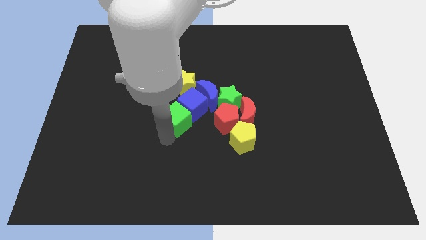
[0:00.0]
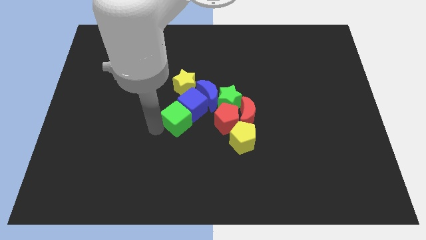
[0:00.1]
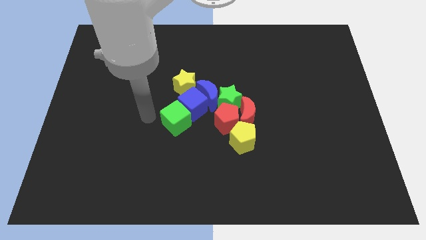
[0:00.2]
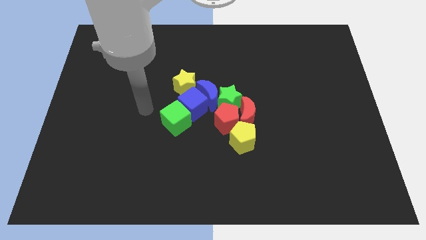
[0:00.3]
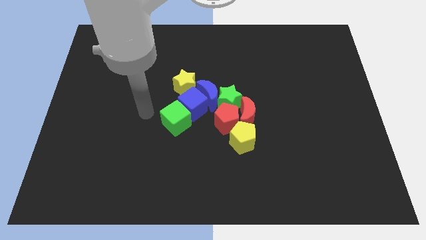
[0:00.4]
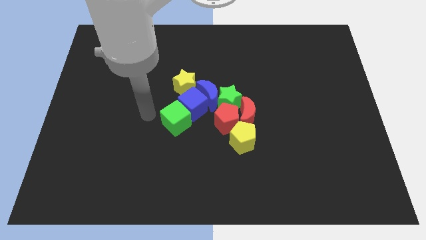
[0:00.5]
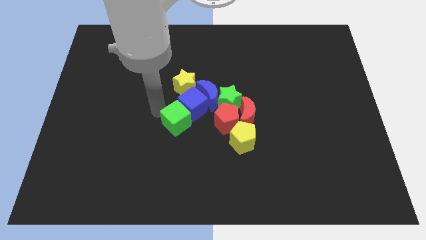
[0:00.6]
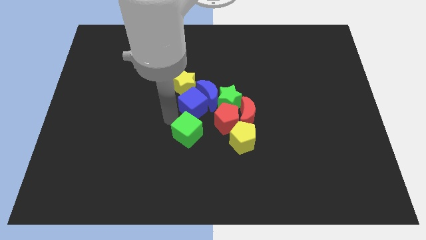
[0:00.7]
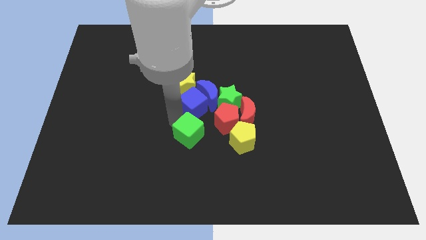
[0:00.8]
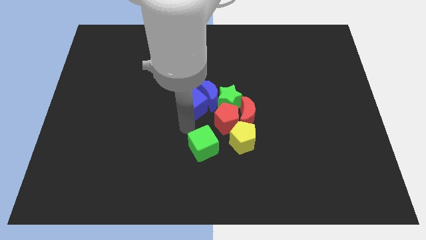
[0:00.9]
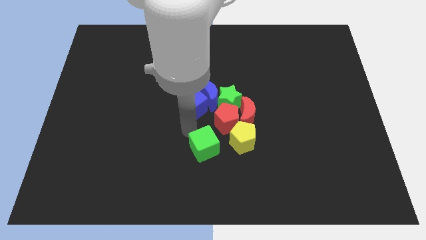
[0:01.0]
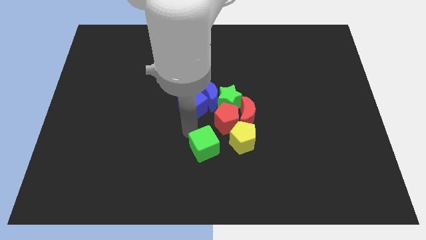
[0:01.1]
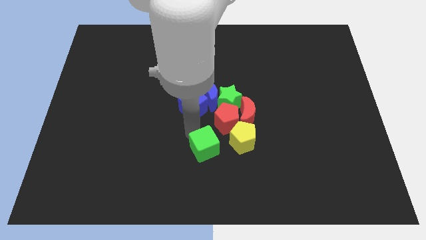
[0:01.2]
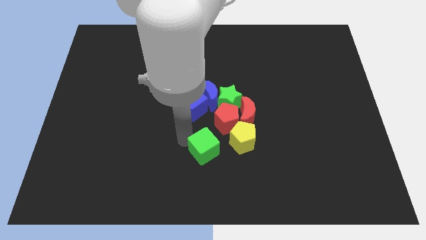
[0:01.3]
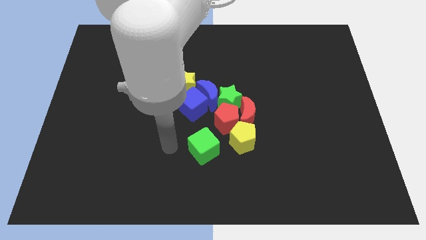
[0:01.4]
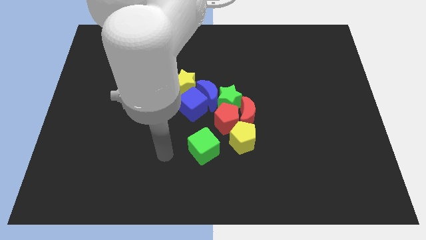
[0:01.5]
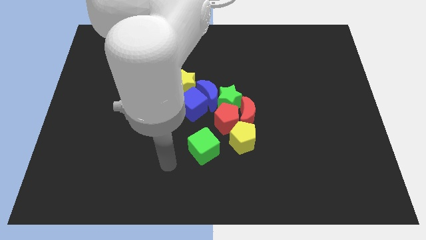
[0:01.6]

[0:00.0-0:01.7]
move the green cube left to yellow pentagon

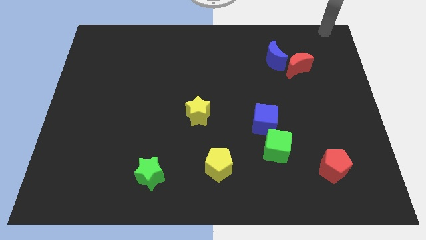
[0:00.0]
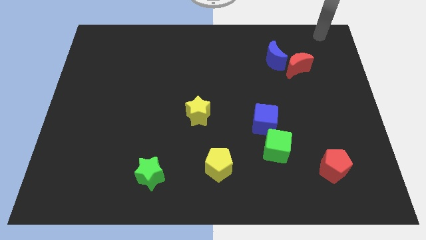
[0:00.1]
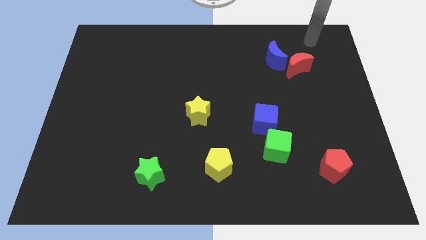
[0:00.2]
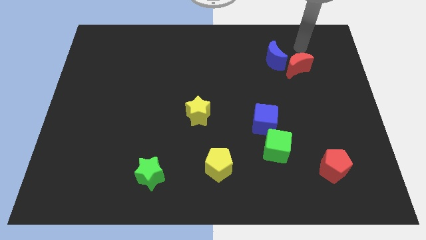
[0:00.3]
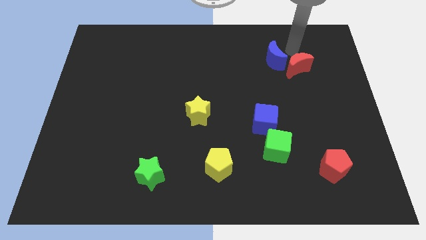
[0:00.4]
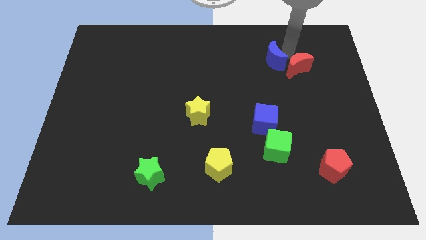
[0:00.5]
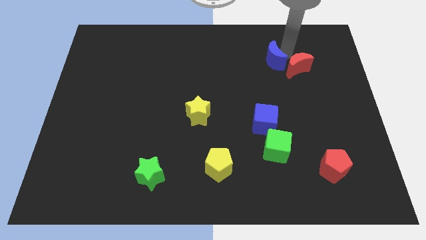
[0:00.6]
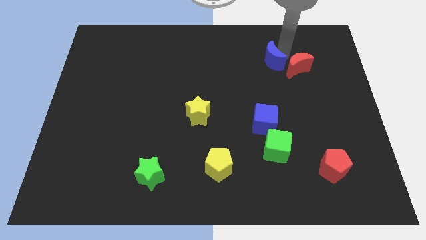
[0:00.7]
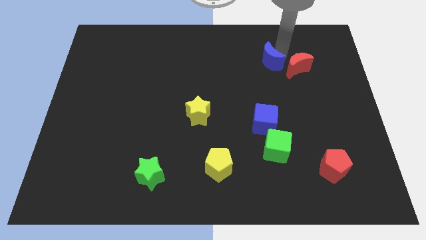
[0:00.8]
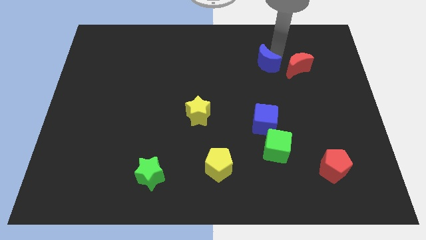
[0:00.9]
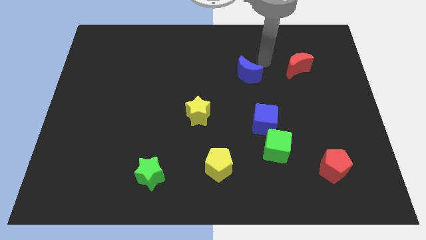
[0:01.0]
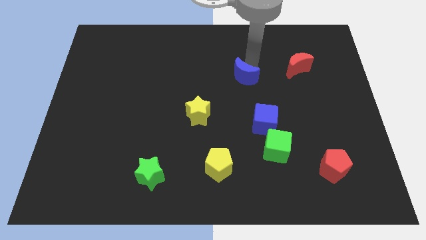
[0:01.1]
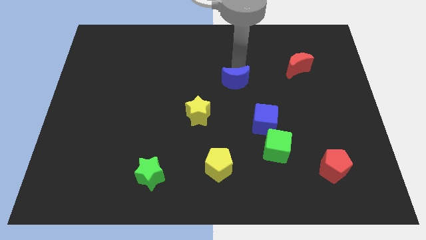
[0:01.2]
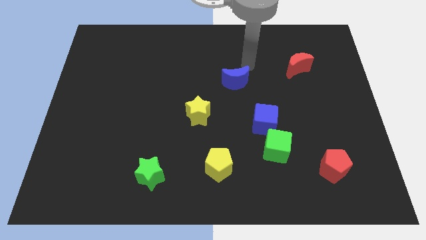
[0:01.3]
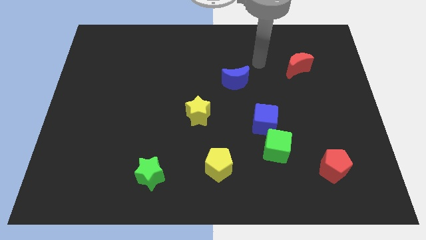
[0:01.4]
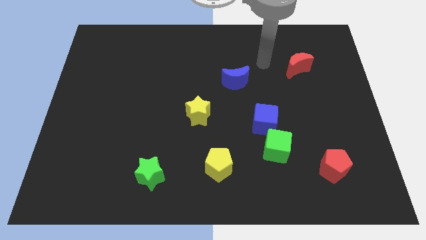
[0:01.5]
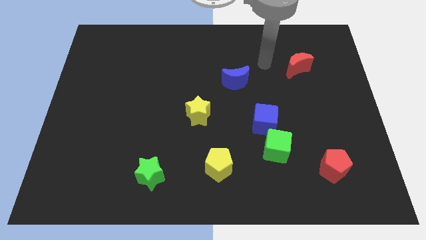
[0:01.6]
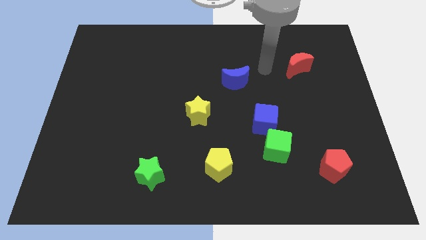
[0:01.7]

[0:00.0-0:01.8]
move the blue moon diagonally to the blue cube

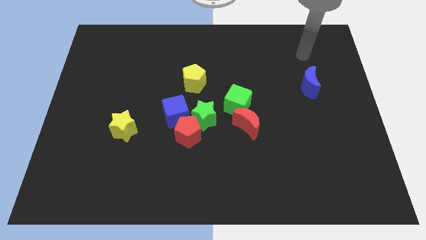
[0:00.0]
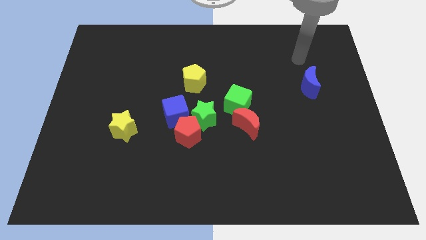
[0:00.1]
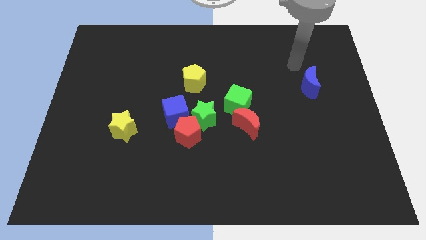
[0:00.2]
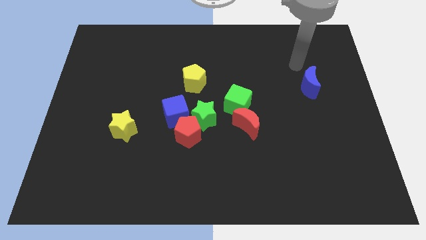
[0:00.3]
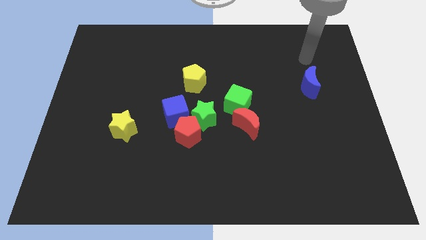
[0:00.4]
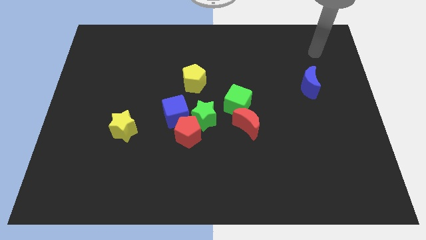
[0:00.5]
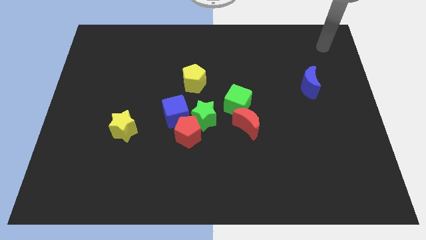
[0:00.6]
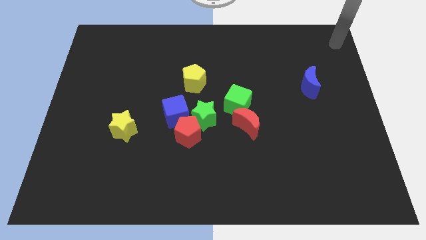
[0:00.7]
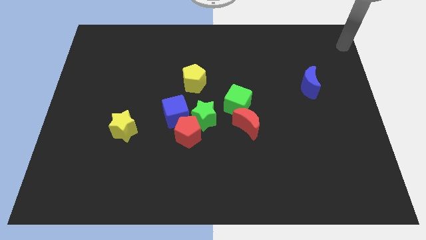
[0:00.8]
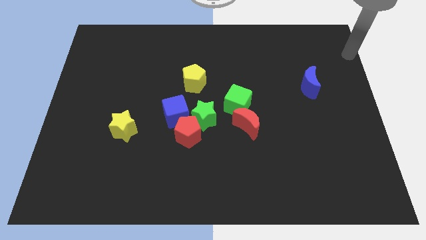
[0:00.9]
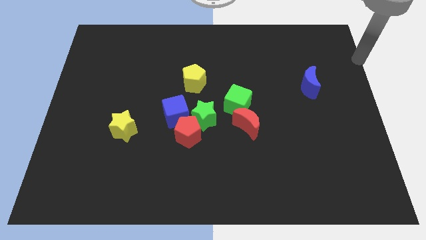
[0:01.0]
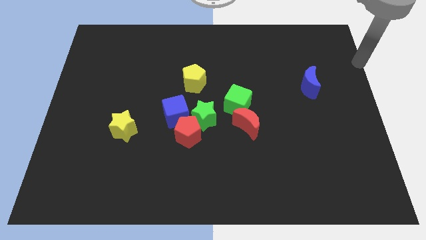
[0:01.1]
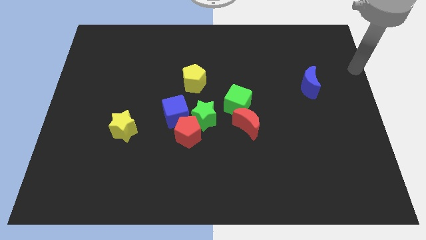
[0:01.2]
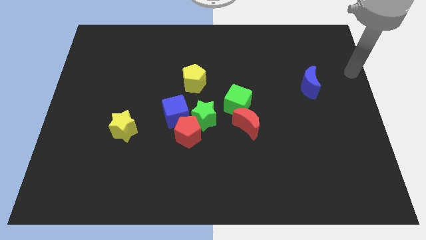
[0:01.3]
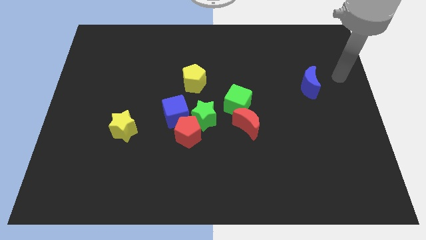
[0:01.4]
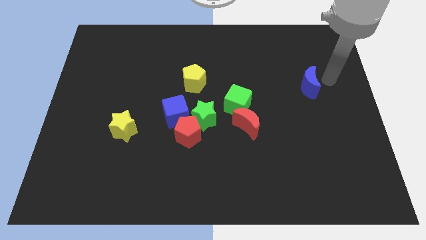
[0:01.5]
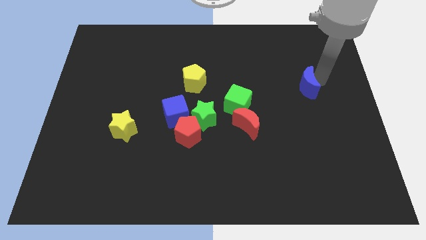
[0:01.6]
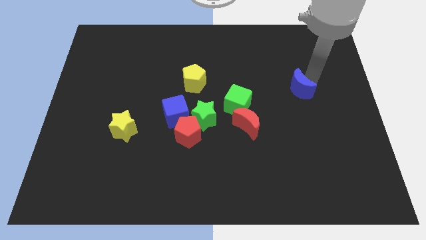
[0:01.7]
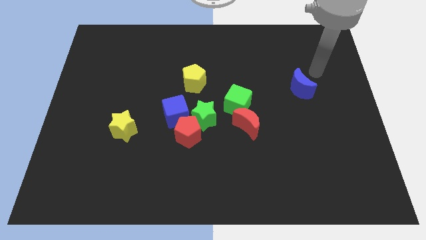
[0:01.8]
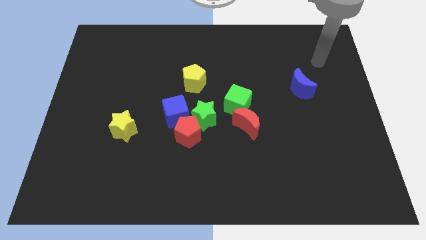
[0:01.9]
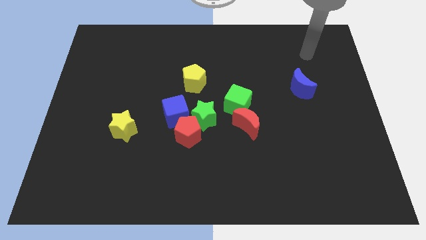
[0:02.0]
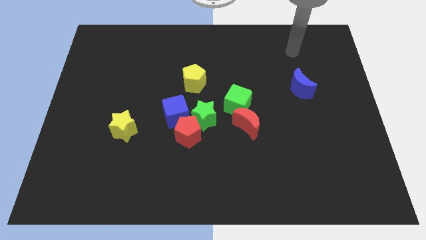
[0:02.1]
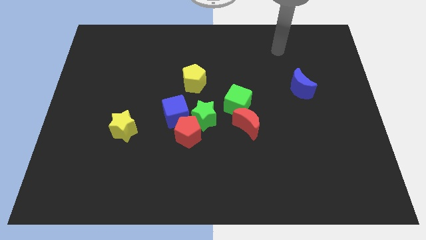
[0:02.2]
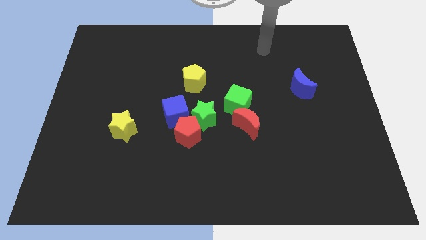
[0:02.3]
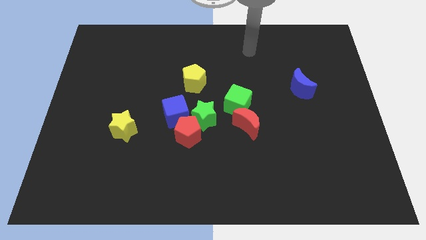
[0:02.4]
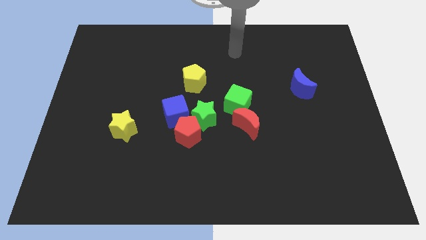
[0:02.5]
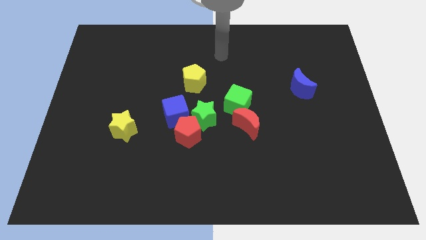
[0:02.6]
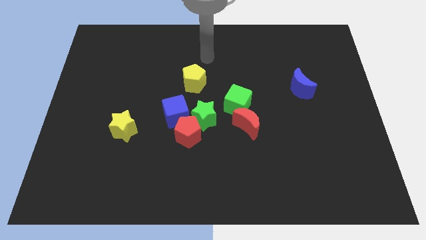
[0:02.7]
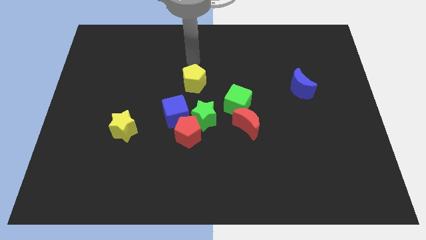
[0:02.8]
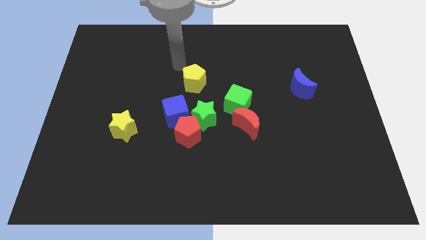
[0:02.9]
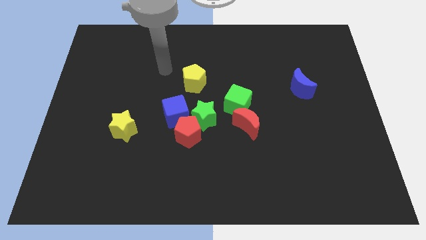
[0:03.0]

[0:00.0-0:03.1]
go near the yellow pentagon

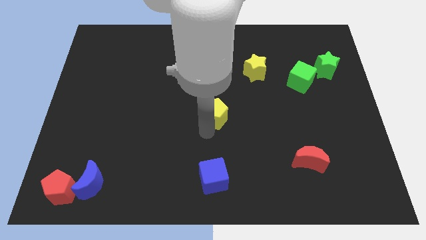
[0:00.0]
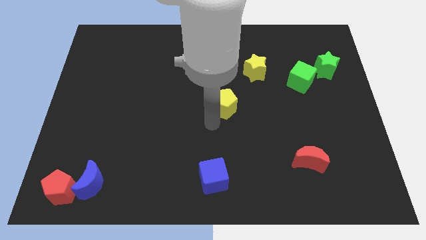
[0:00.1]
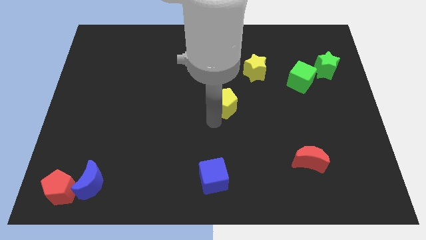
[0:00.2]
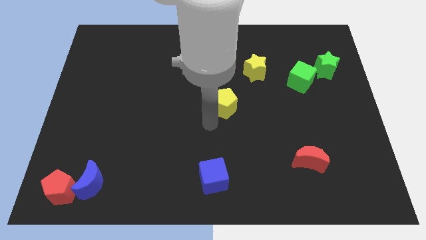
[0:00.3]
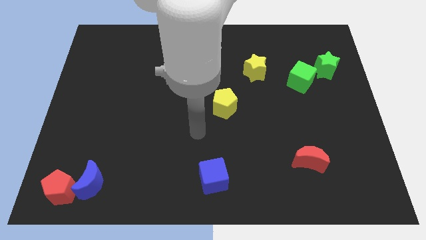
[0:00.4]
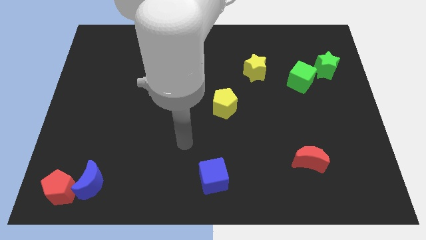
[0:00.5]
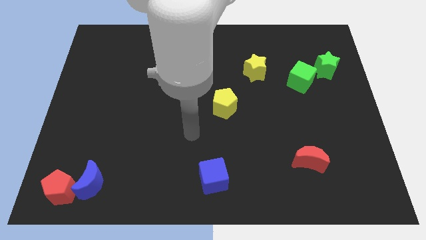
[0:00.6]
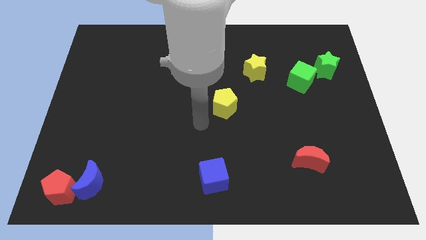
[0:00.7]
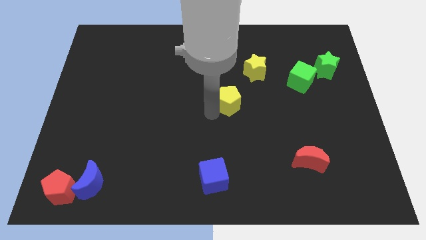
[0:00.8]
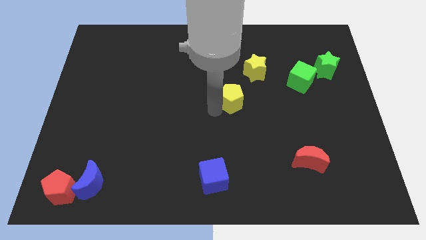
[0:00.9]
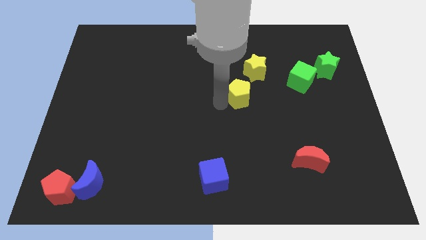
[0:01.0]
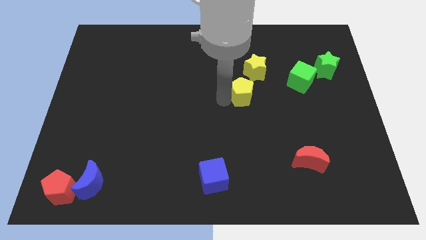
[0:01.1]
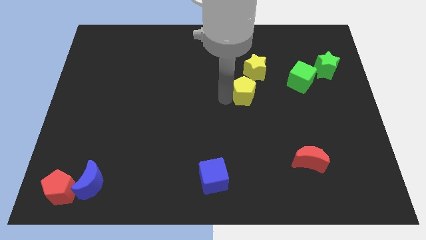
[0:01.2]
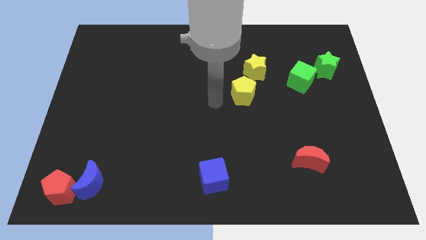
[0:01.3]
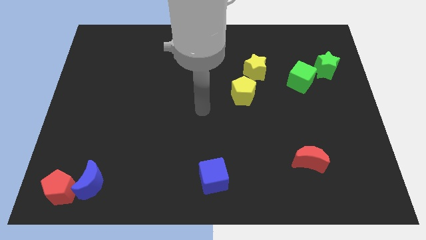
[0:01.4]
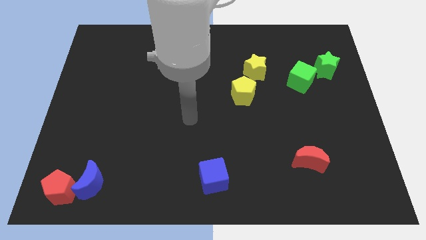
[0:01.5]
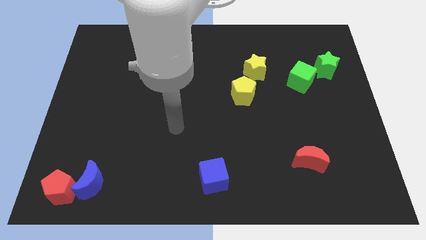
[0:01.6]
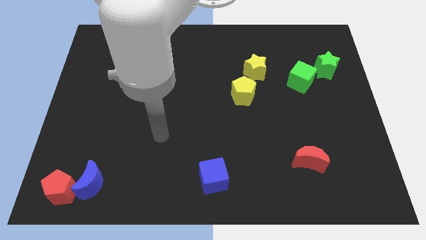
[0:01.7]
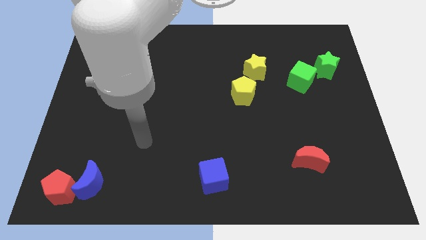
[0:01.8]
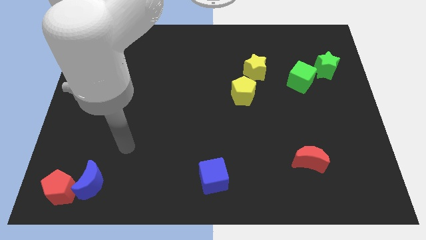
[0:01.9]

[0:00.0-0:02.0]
push the yellow pentagon towards the yellow star

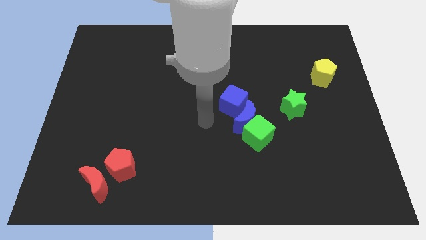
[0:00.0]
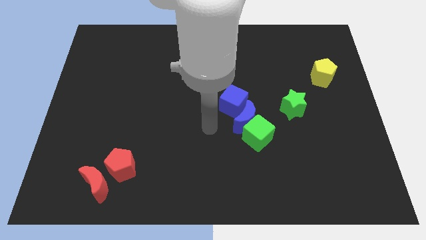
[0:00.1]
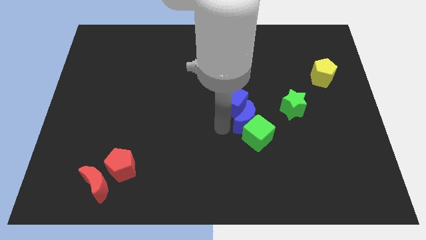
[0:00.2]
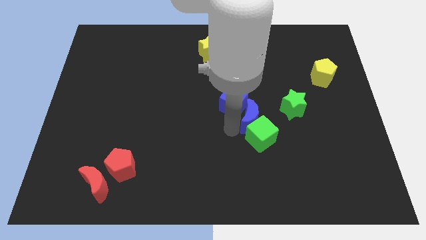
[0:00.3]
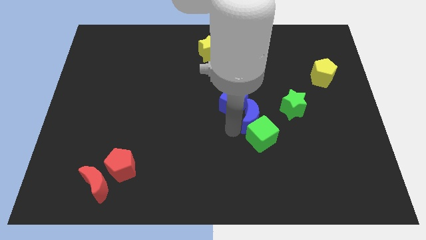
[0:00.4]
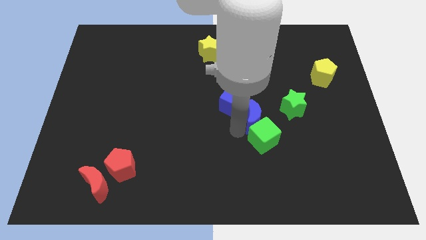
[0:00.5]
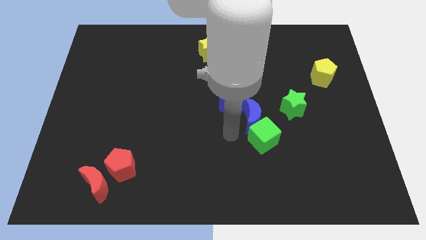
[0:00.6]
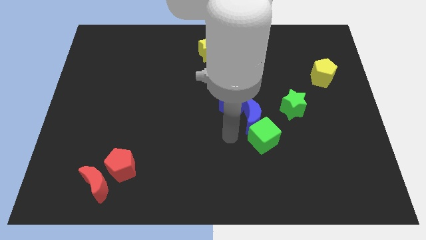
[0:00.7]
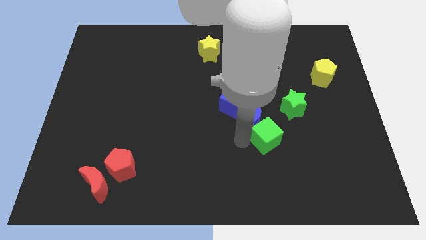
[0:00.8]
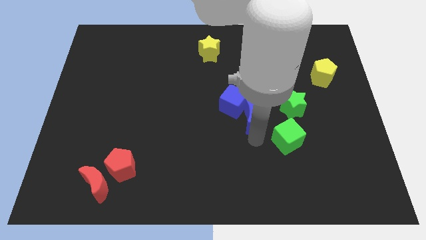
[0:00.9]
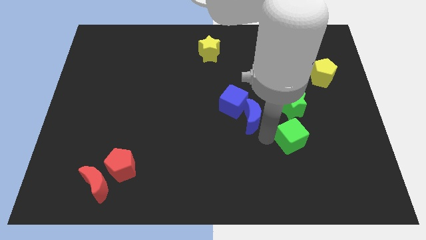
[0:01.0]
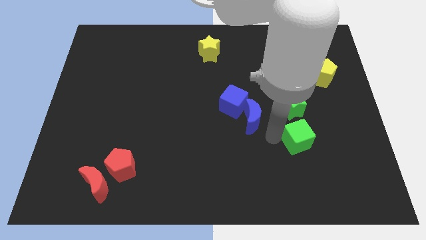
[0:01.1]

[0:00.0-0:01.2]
adjust the blue crescent and green cube diagonally to the bottom right side of the blue cube
